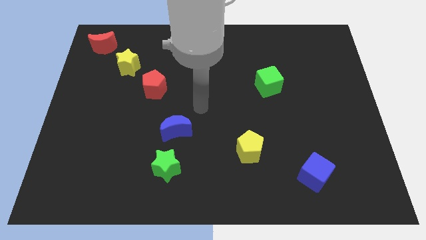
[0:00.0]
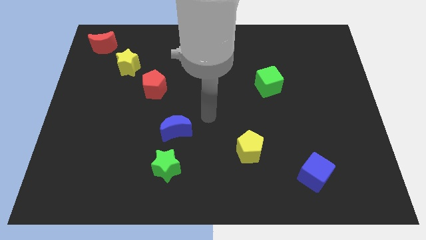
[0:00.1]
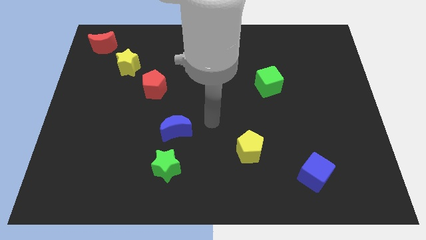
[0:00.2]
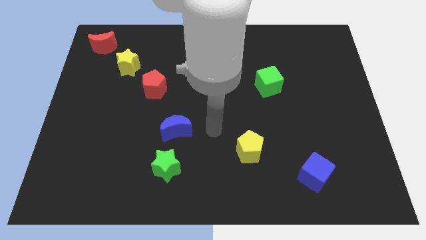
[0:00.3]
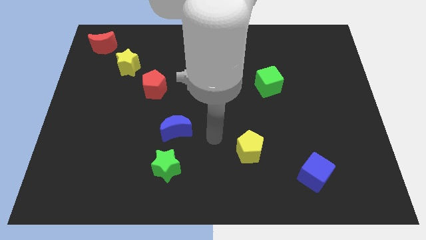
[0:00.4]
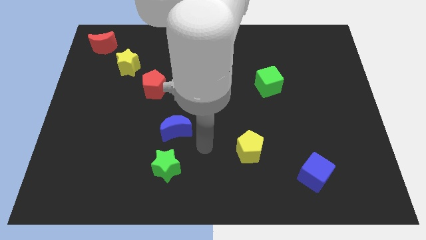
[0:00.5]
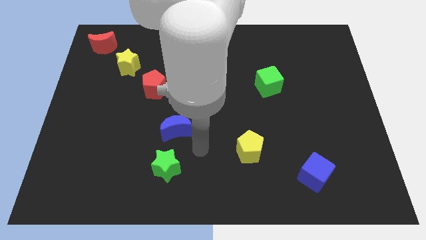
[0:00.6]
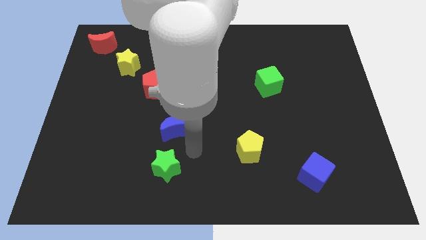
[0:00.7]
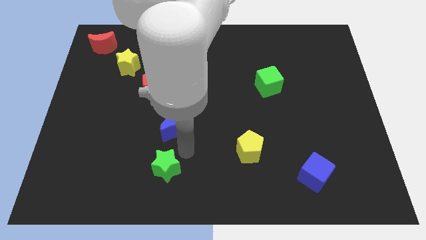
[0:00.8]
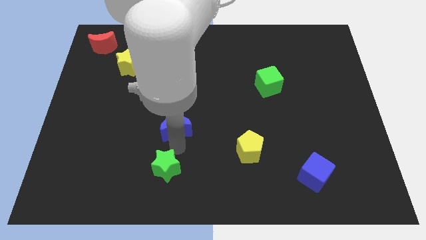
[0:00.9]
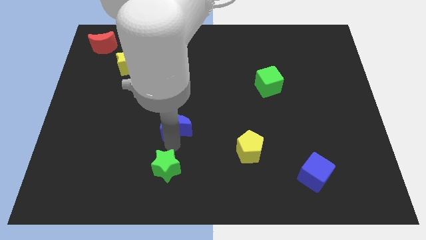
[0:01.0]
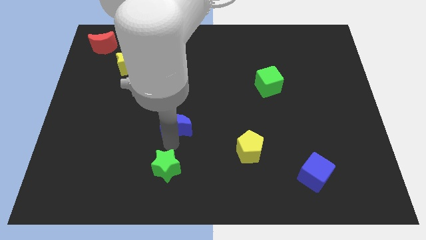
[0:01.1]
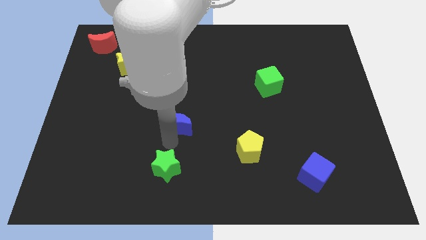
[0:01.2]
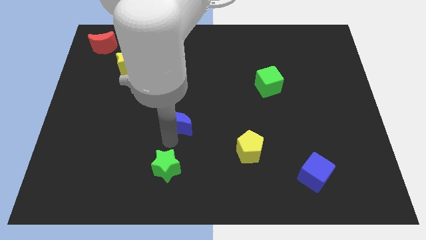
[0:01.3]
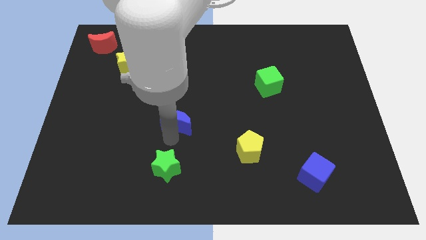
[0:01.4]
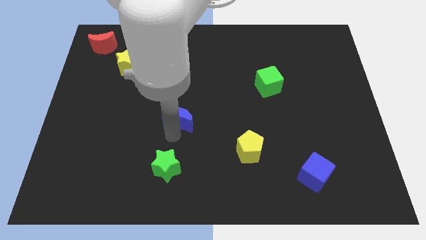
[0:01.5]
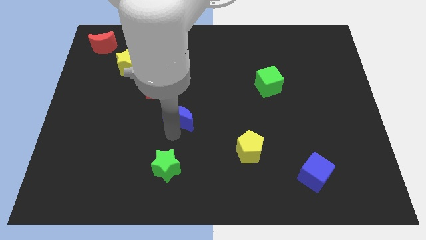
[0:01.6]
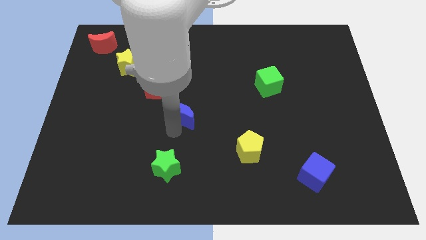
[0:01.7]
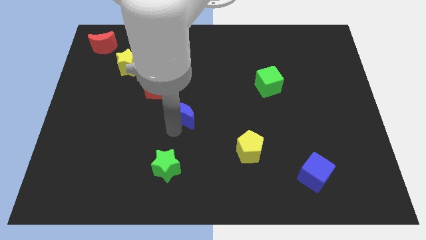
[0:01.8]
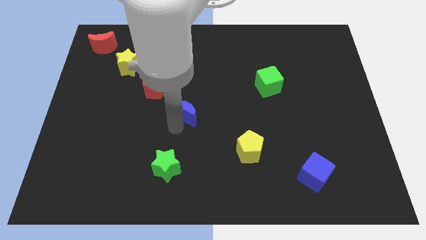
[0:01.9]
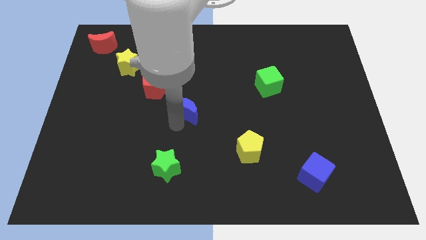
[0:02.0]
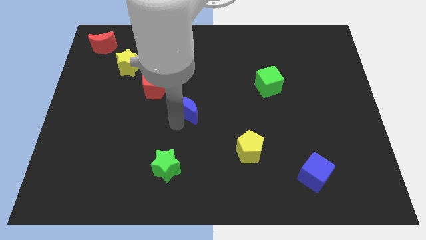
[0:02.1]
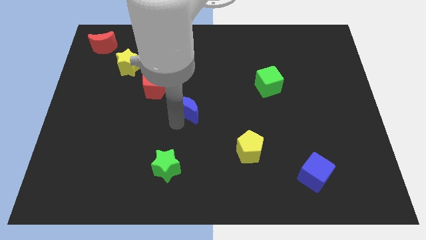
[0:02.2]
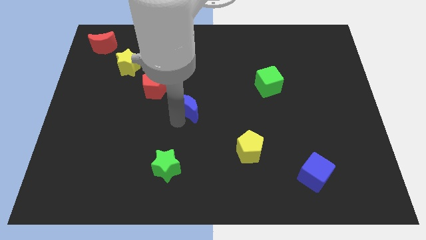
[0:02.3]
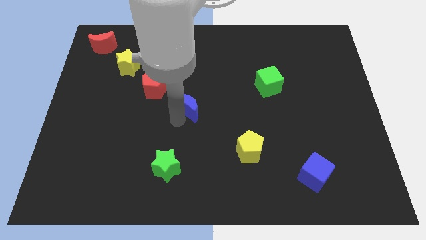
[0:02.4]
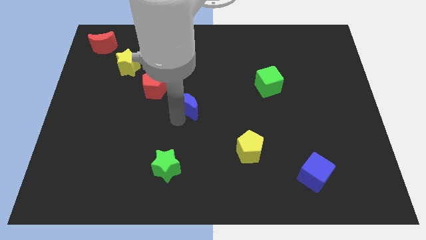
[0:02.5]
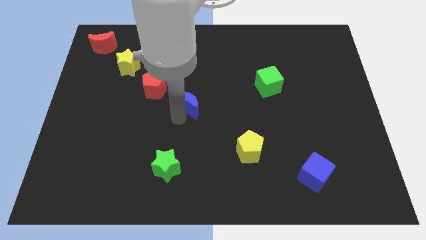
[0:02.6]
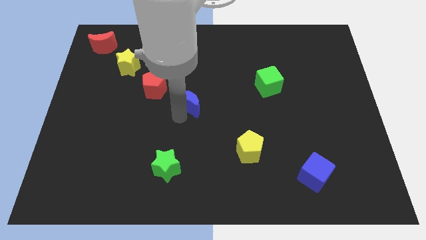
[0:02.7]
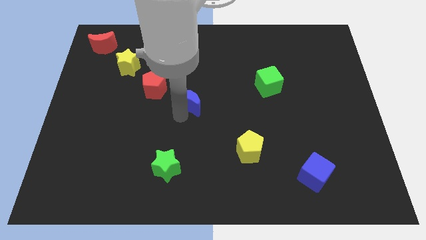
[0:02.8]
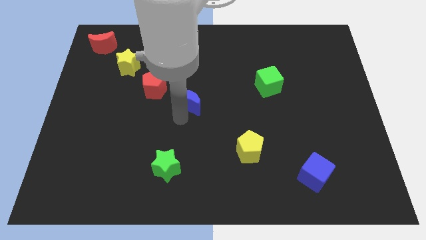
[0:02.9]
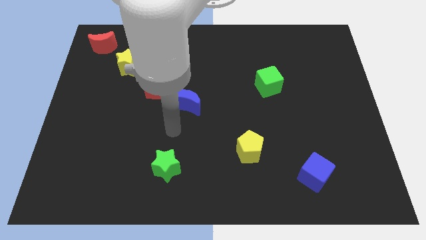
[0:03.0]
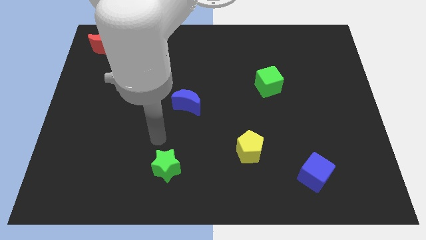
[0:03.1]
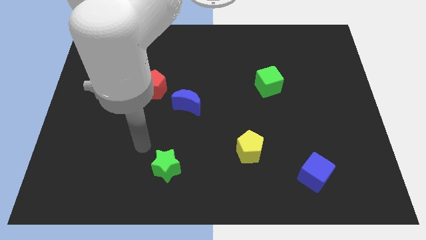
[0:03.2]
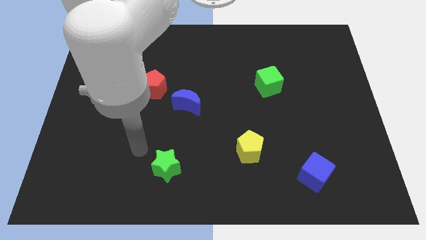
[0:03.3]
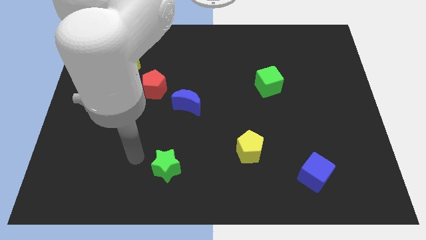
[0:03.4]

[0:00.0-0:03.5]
move the blue crescent to the right of the red pentagon

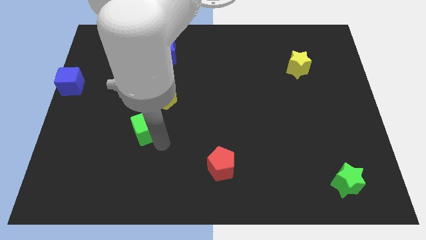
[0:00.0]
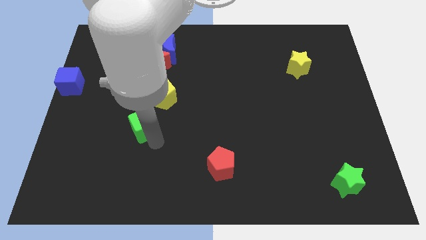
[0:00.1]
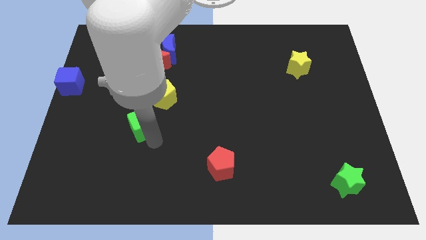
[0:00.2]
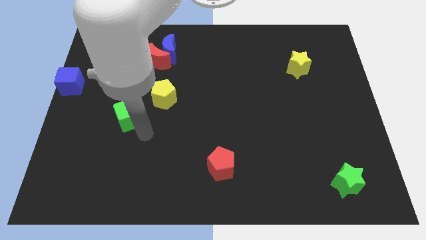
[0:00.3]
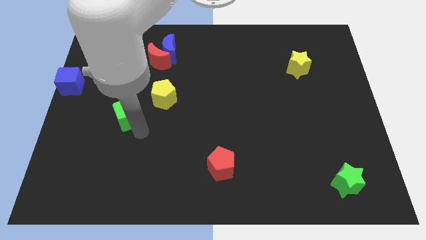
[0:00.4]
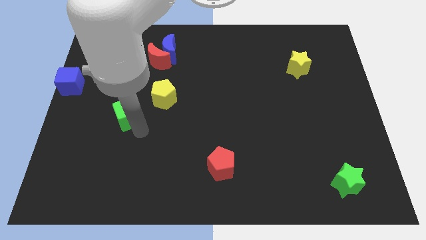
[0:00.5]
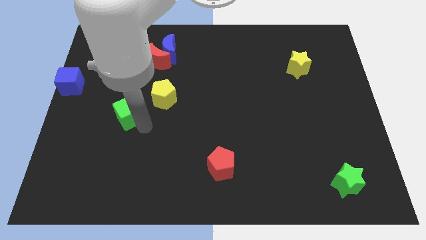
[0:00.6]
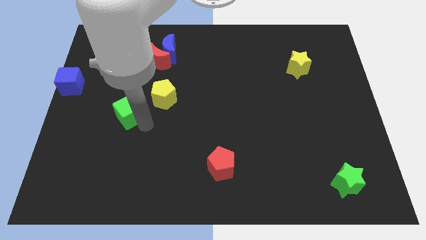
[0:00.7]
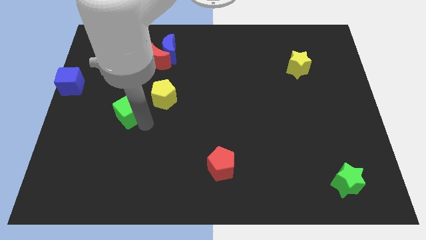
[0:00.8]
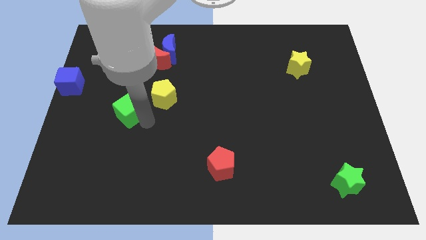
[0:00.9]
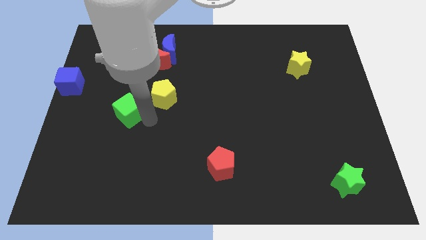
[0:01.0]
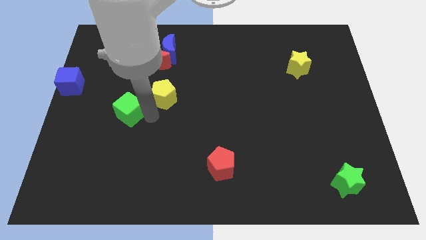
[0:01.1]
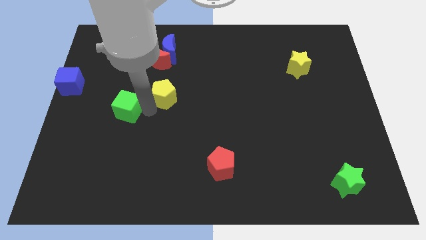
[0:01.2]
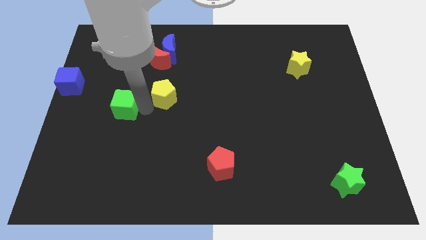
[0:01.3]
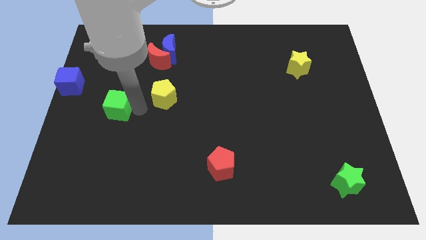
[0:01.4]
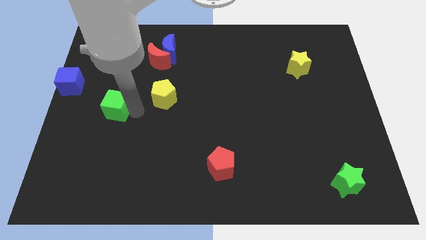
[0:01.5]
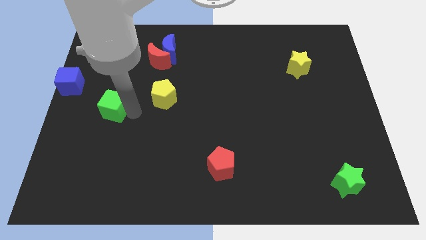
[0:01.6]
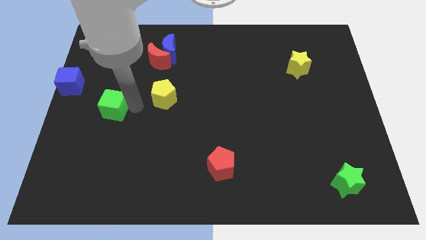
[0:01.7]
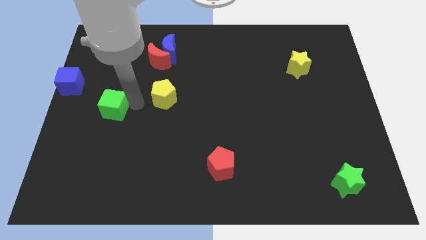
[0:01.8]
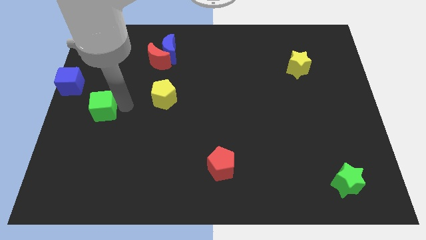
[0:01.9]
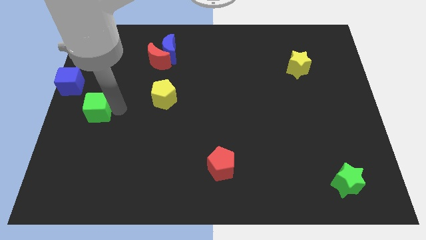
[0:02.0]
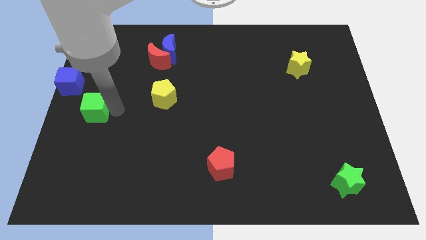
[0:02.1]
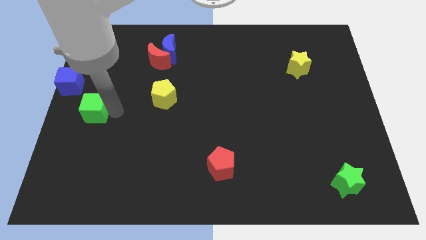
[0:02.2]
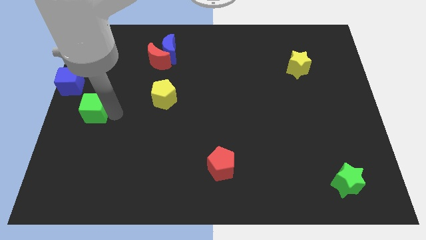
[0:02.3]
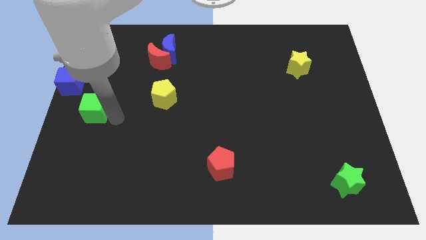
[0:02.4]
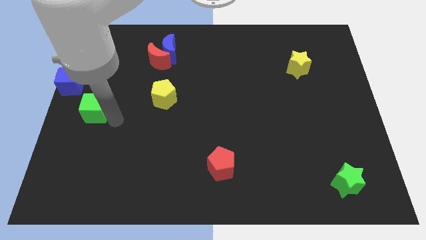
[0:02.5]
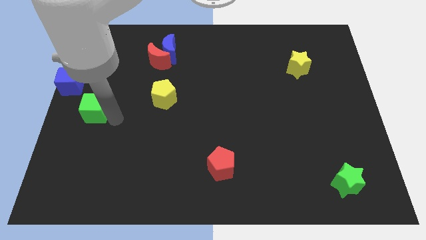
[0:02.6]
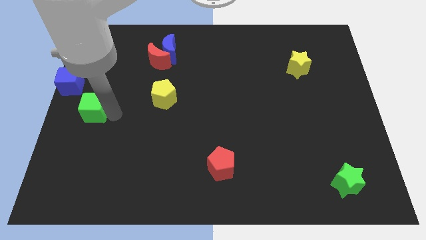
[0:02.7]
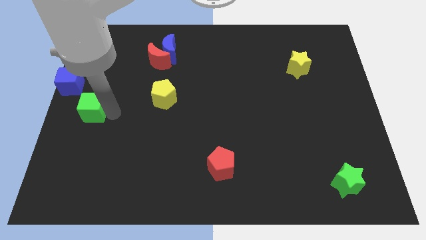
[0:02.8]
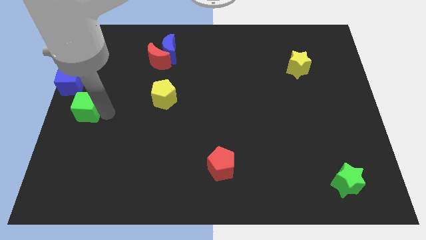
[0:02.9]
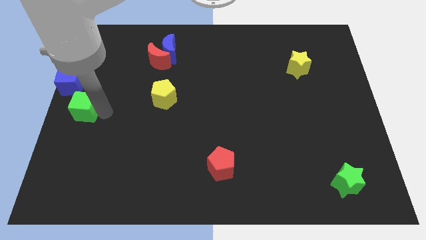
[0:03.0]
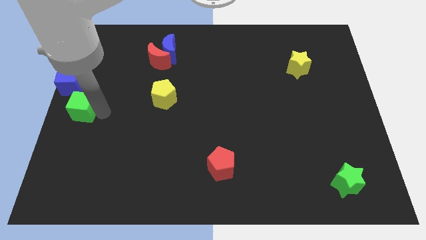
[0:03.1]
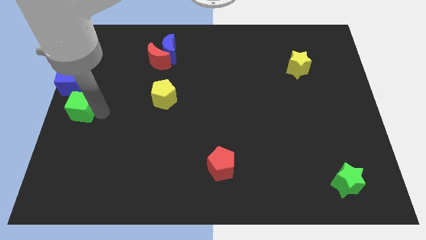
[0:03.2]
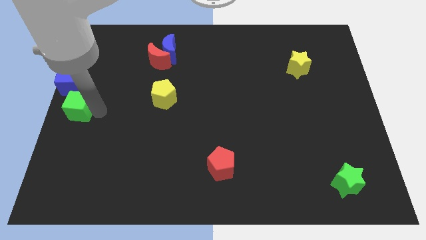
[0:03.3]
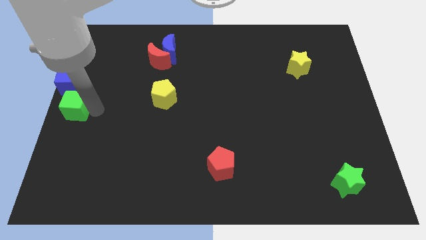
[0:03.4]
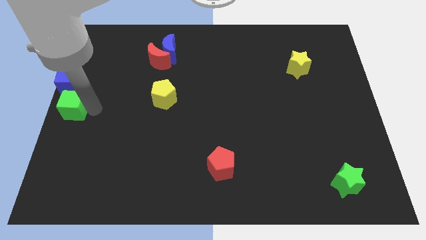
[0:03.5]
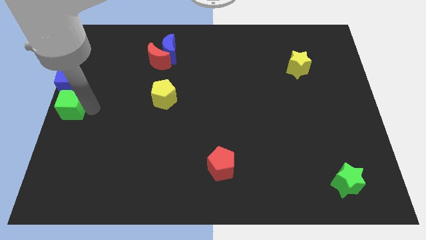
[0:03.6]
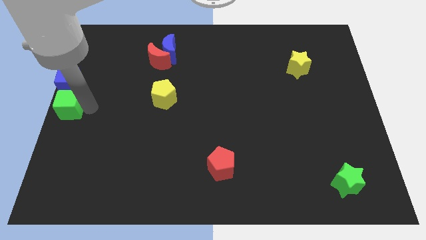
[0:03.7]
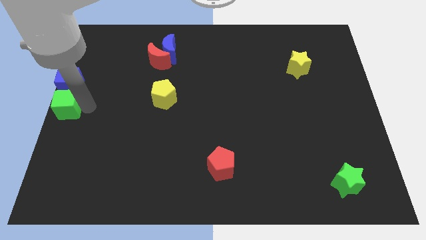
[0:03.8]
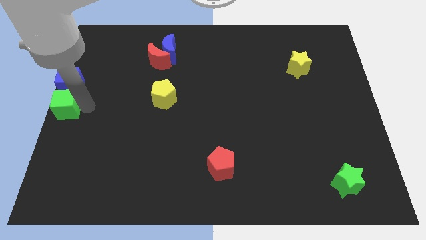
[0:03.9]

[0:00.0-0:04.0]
move the green cube below to the green

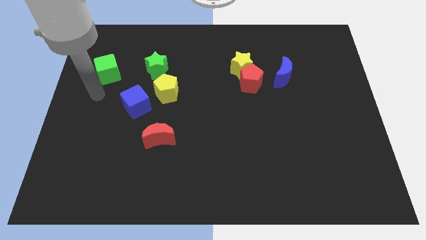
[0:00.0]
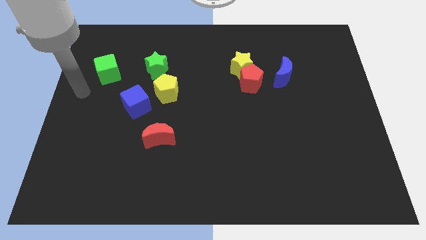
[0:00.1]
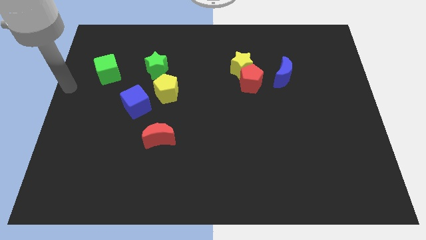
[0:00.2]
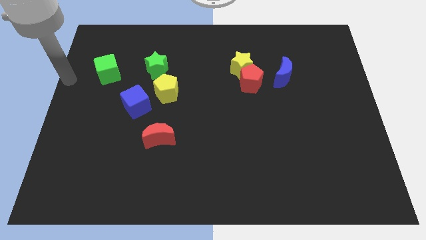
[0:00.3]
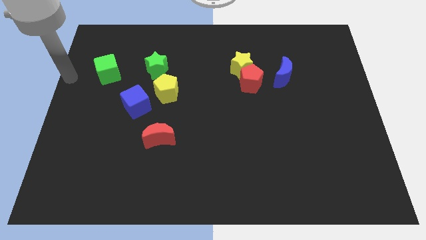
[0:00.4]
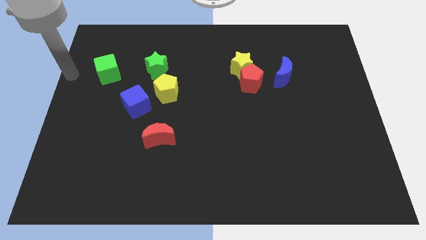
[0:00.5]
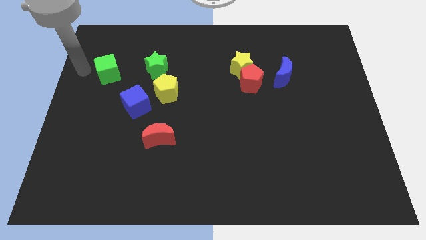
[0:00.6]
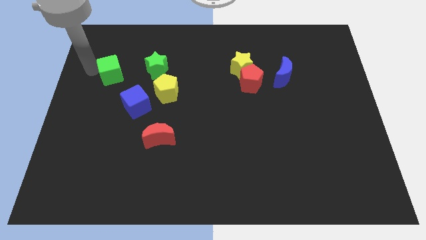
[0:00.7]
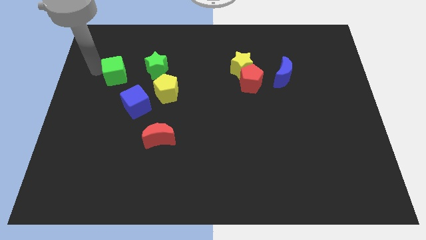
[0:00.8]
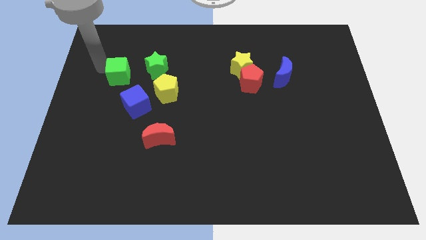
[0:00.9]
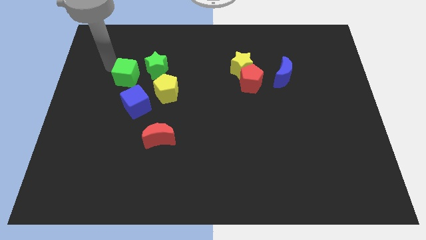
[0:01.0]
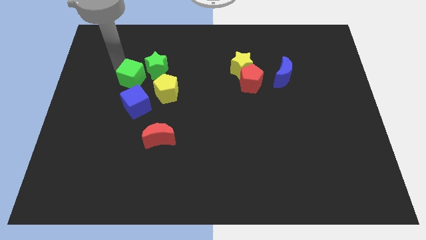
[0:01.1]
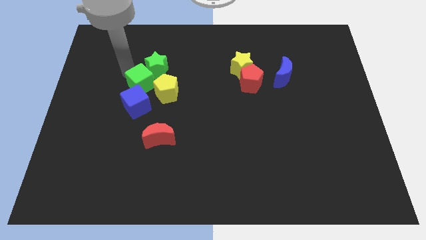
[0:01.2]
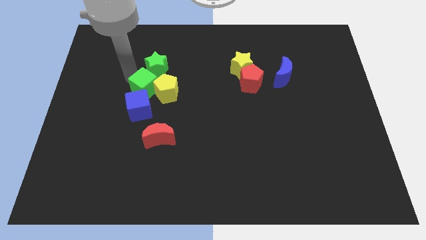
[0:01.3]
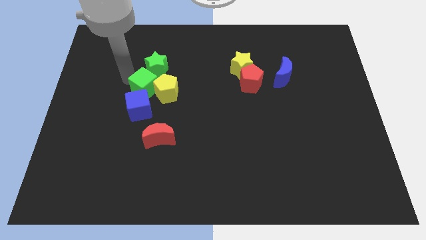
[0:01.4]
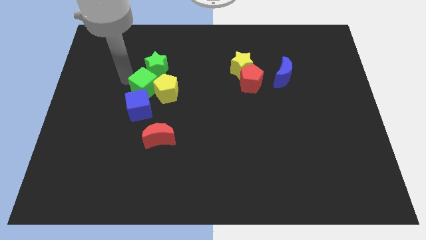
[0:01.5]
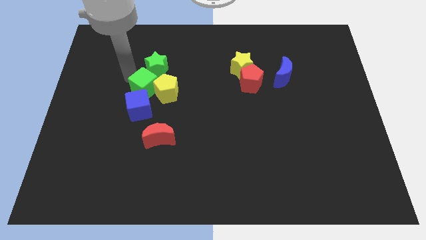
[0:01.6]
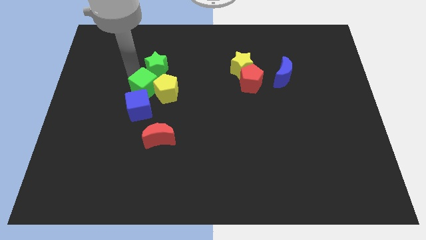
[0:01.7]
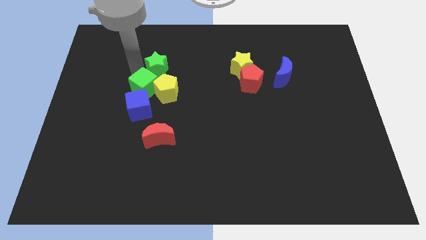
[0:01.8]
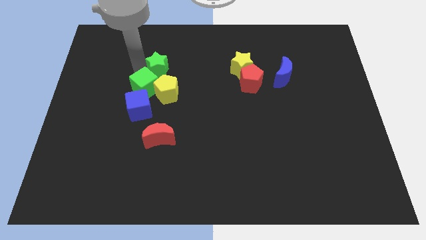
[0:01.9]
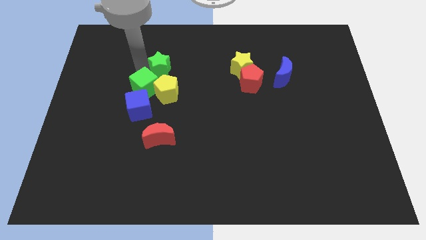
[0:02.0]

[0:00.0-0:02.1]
push the green cube into the yellow pentagon
